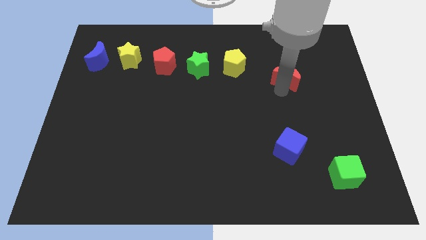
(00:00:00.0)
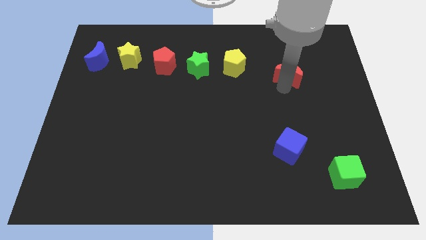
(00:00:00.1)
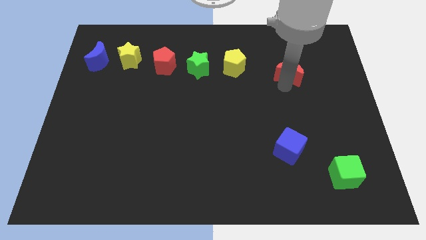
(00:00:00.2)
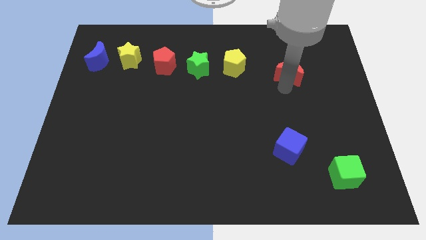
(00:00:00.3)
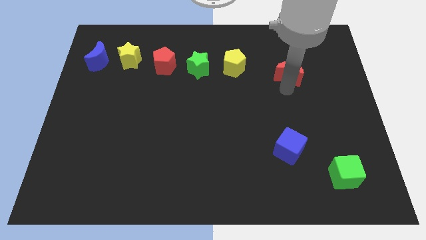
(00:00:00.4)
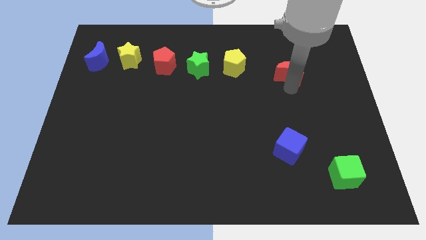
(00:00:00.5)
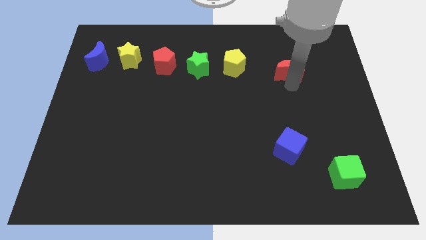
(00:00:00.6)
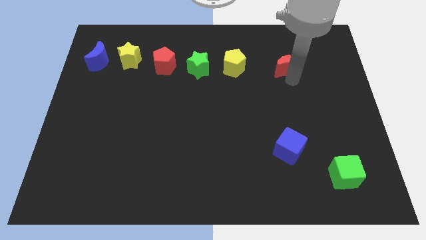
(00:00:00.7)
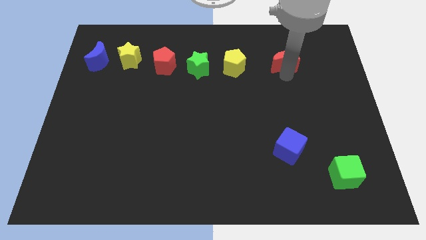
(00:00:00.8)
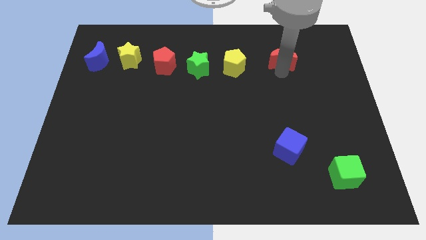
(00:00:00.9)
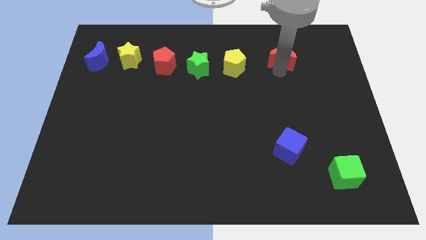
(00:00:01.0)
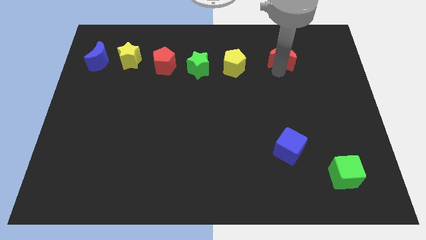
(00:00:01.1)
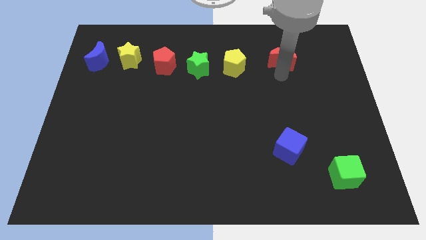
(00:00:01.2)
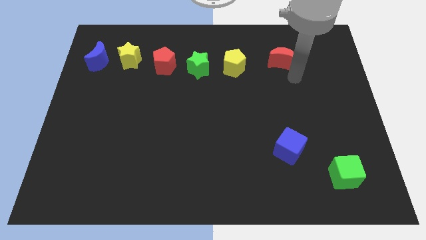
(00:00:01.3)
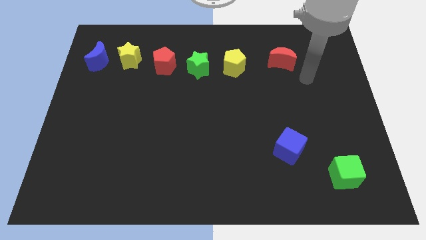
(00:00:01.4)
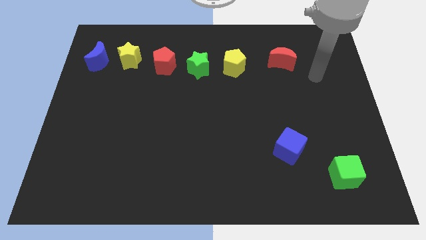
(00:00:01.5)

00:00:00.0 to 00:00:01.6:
move the red moon to the right side of the yellow pentagon

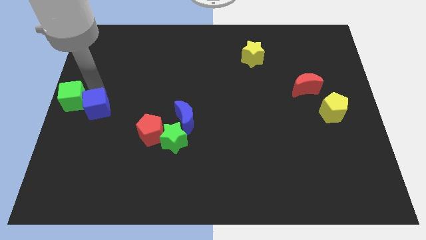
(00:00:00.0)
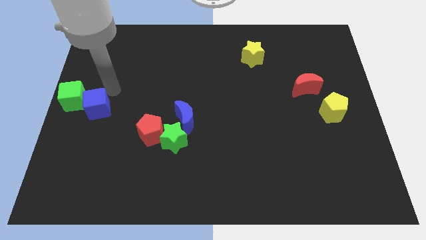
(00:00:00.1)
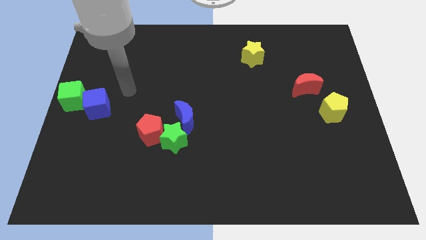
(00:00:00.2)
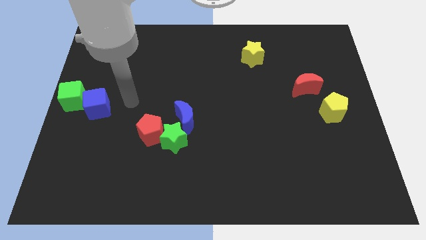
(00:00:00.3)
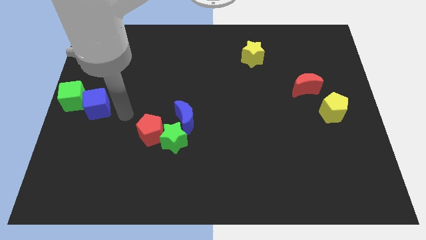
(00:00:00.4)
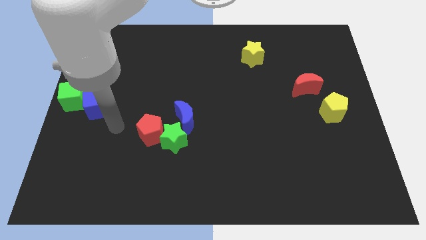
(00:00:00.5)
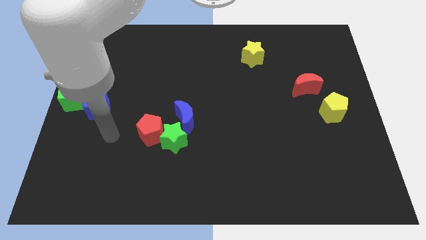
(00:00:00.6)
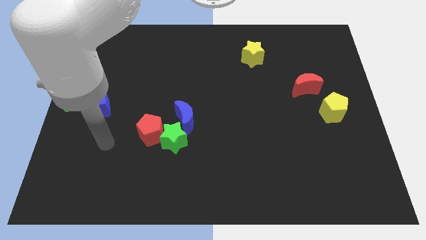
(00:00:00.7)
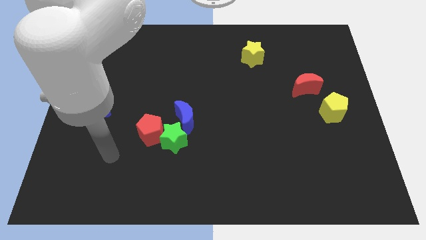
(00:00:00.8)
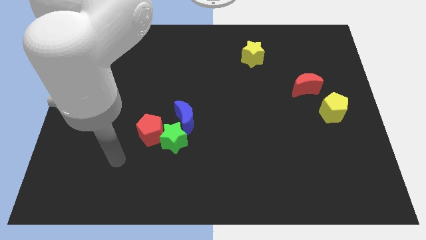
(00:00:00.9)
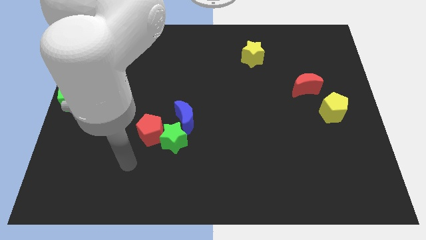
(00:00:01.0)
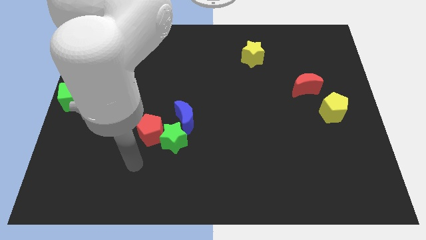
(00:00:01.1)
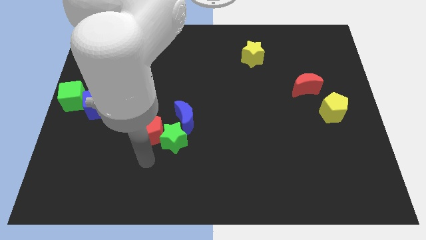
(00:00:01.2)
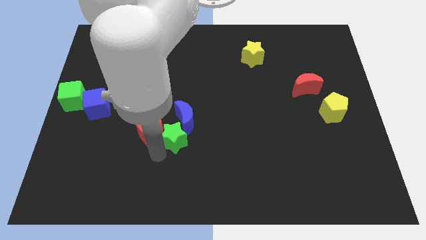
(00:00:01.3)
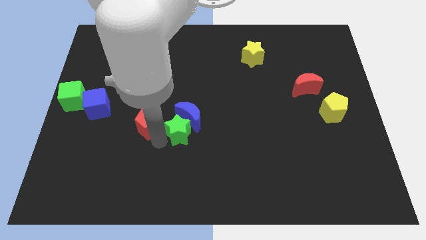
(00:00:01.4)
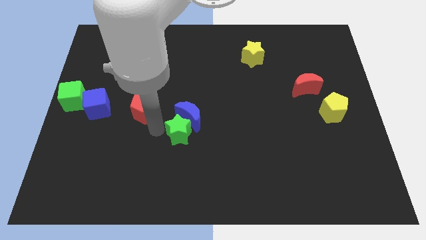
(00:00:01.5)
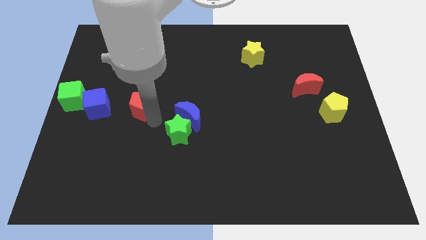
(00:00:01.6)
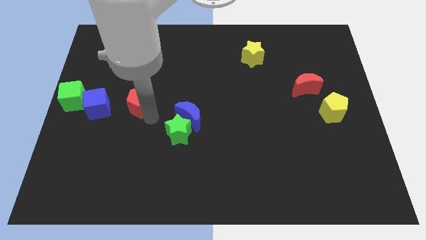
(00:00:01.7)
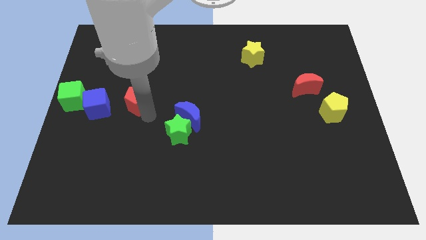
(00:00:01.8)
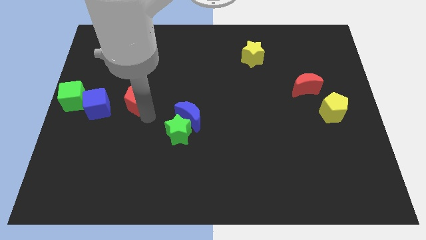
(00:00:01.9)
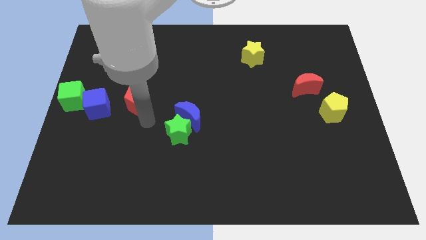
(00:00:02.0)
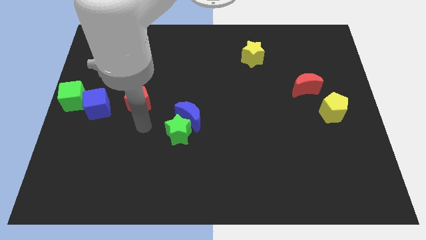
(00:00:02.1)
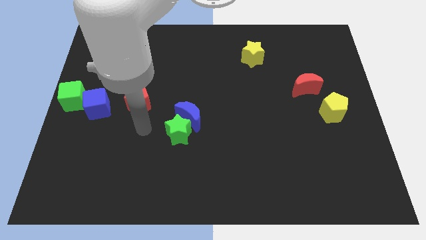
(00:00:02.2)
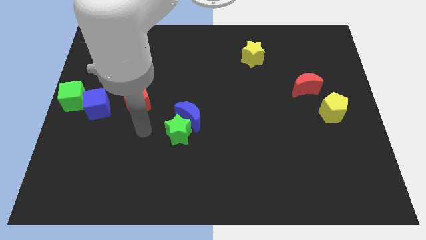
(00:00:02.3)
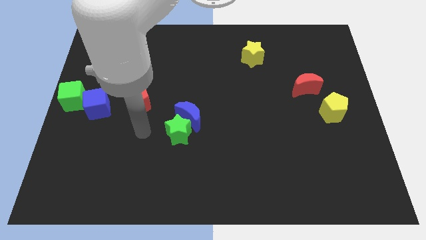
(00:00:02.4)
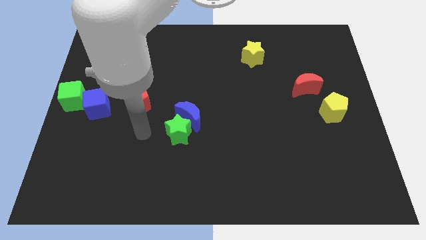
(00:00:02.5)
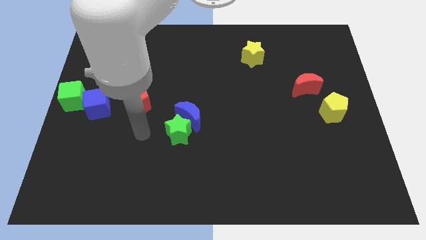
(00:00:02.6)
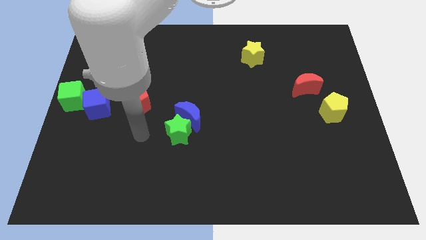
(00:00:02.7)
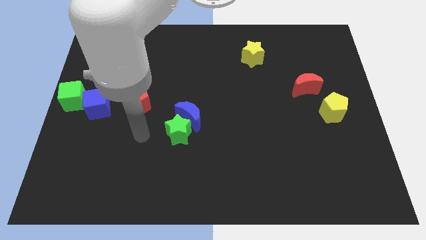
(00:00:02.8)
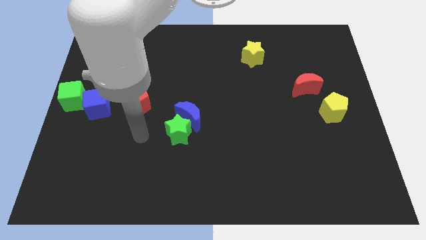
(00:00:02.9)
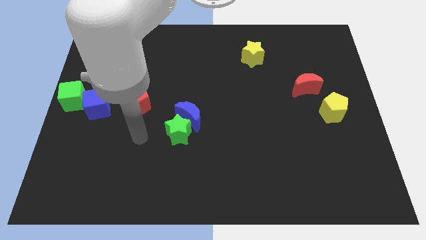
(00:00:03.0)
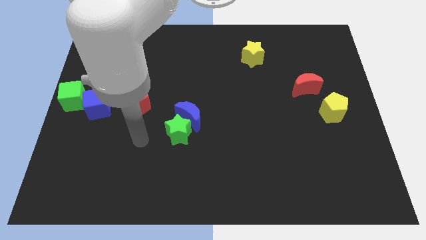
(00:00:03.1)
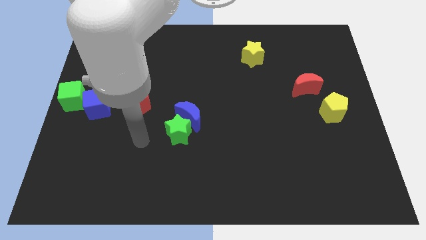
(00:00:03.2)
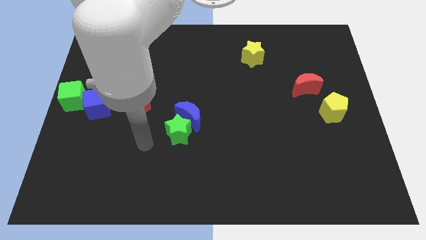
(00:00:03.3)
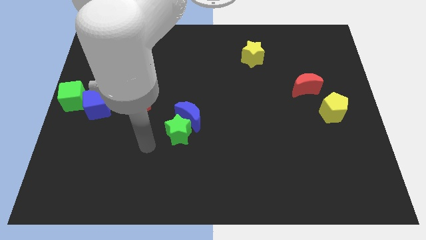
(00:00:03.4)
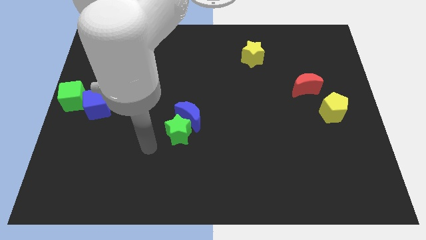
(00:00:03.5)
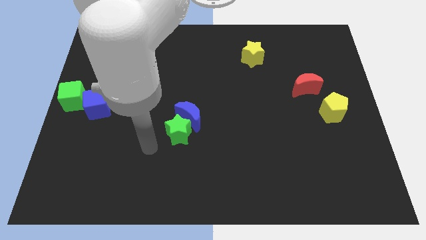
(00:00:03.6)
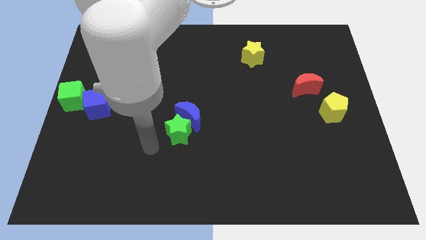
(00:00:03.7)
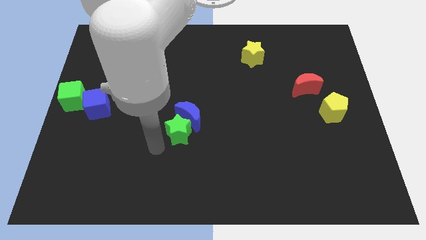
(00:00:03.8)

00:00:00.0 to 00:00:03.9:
place the red pentagon to the right of the blue cube

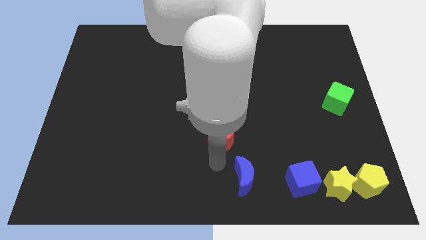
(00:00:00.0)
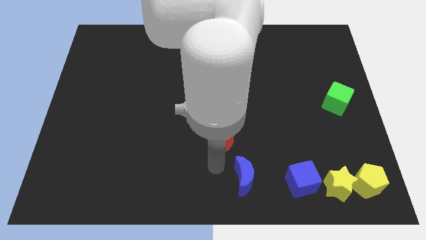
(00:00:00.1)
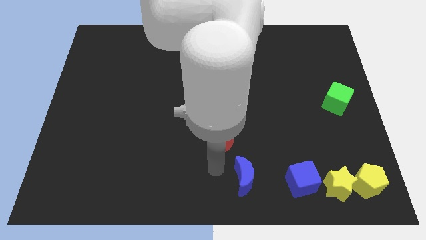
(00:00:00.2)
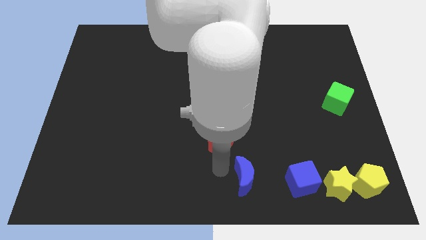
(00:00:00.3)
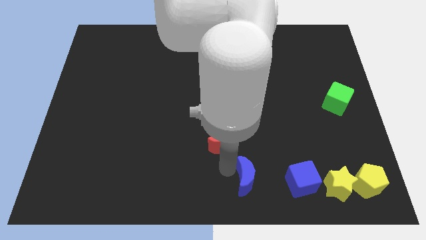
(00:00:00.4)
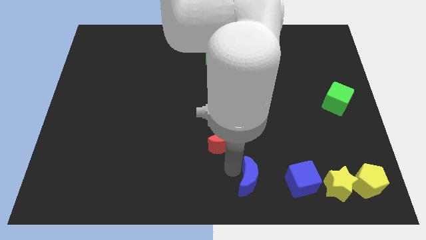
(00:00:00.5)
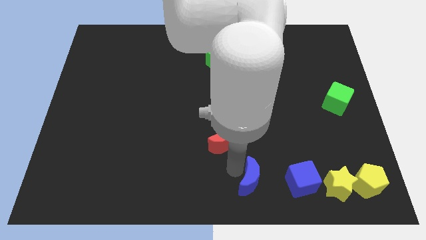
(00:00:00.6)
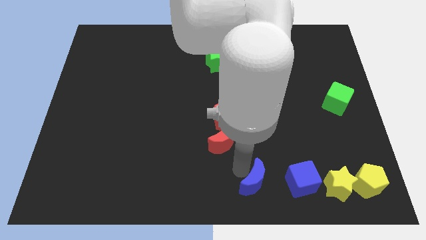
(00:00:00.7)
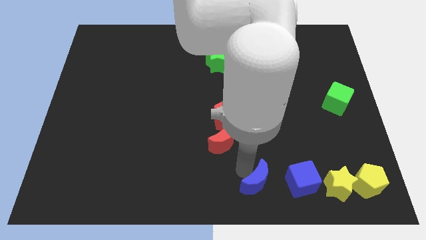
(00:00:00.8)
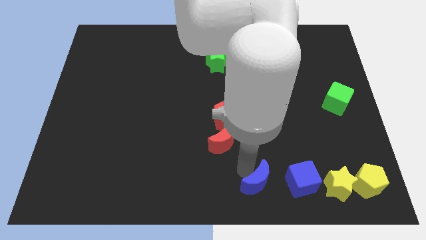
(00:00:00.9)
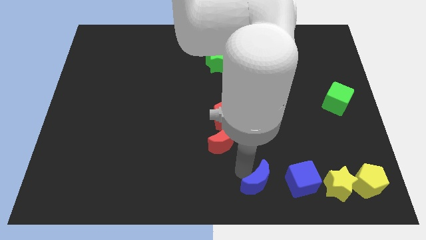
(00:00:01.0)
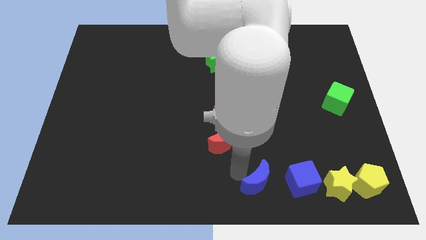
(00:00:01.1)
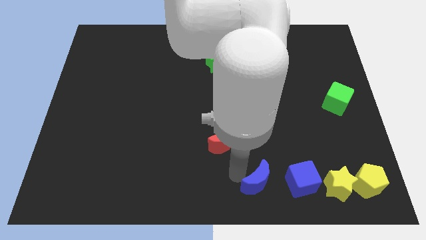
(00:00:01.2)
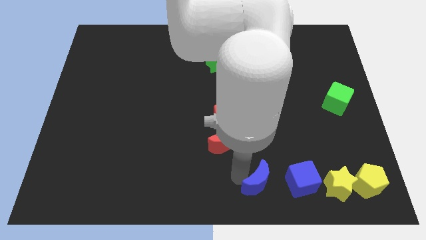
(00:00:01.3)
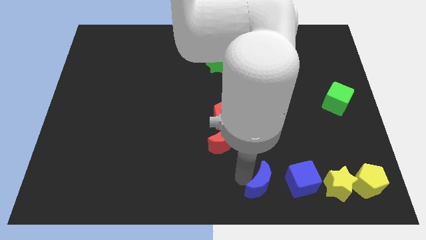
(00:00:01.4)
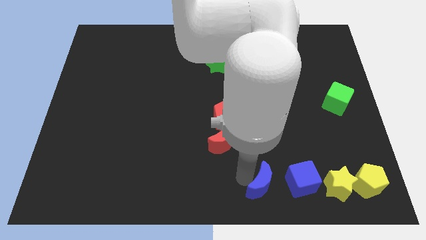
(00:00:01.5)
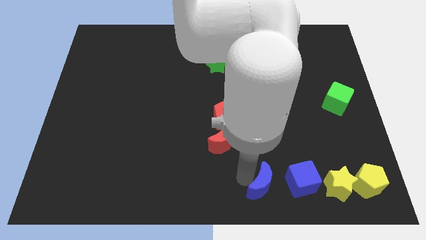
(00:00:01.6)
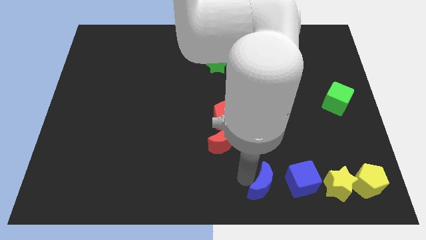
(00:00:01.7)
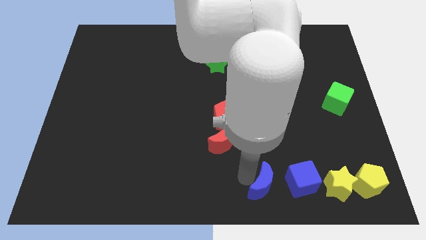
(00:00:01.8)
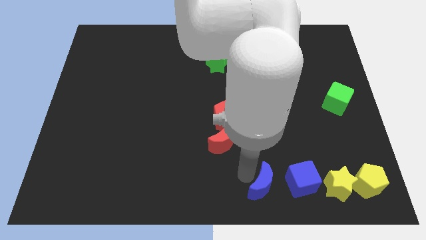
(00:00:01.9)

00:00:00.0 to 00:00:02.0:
place the blue moon left to the the blue cube

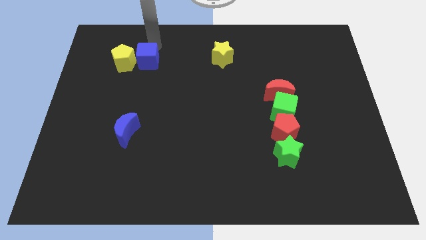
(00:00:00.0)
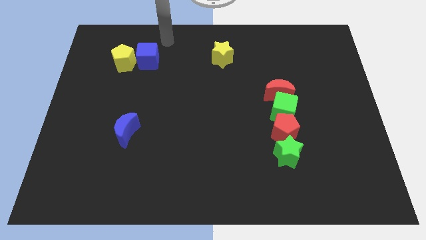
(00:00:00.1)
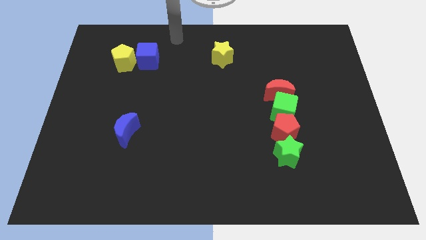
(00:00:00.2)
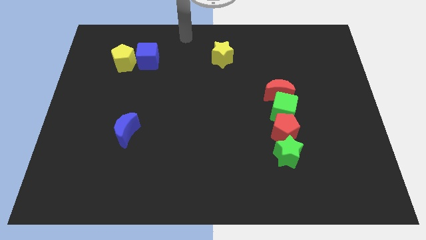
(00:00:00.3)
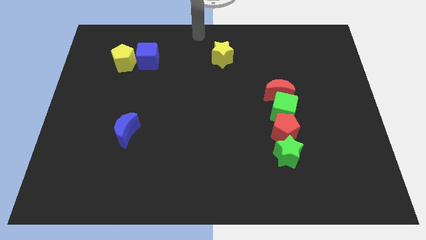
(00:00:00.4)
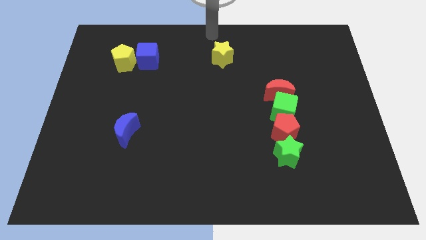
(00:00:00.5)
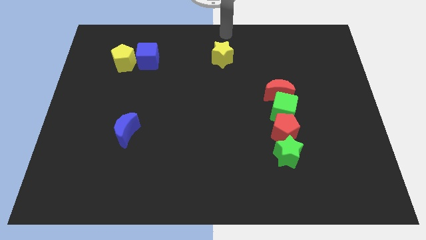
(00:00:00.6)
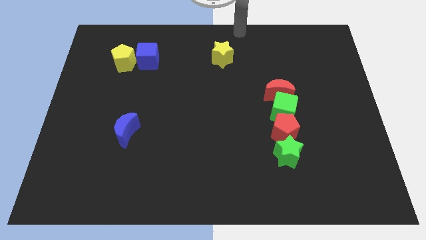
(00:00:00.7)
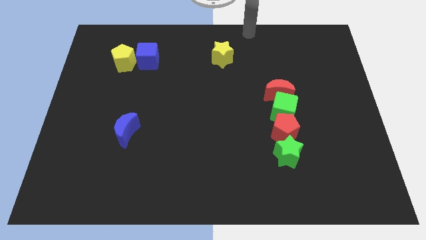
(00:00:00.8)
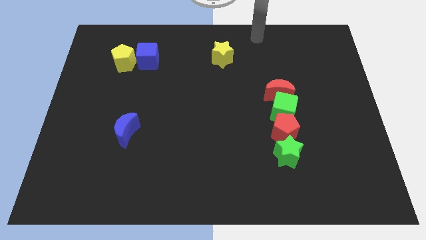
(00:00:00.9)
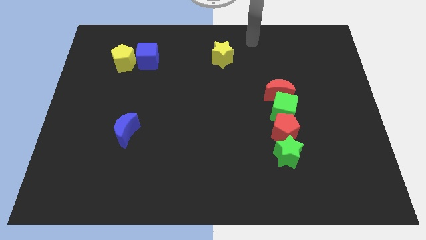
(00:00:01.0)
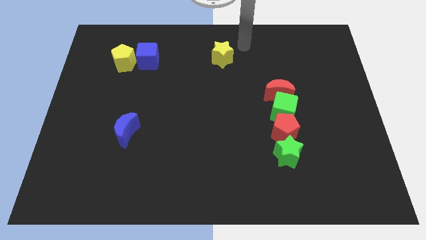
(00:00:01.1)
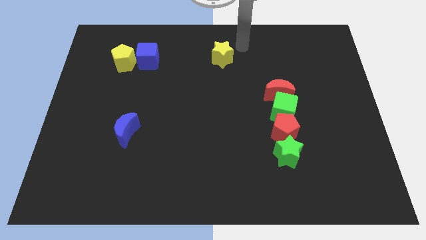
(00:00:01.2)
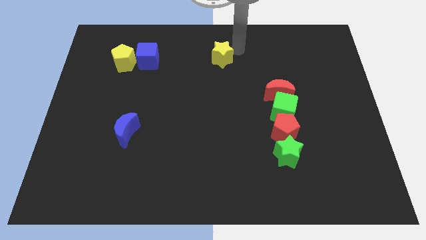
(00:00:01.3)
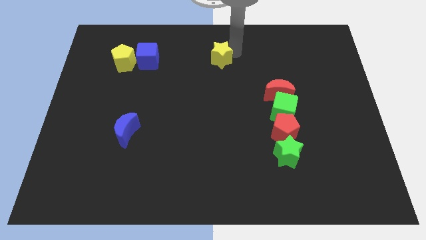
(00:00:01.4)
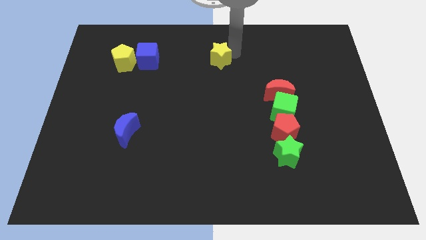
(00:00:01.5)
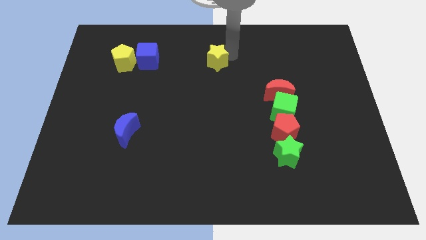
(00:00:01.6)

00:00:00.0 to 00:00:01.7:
move the arm to the left side of the yellow star
